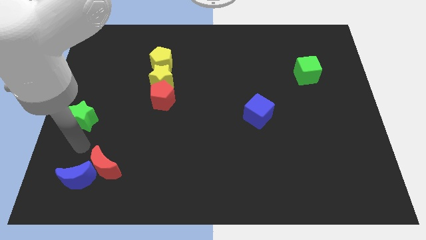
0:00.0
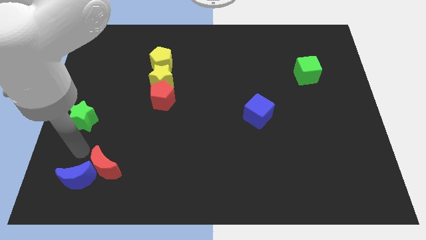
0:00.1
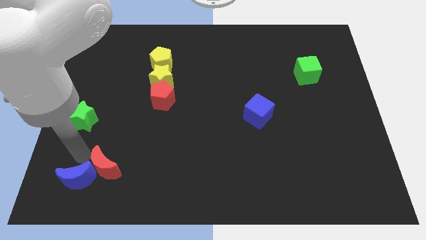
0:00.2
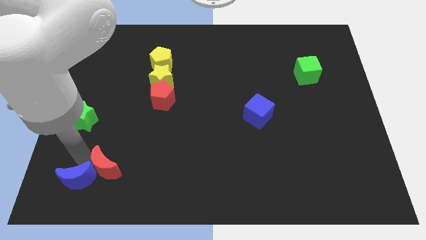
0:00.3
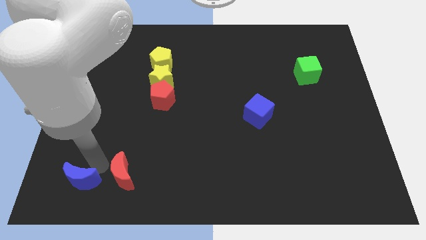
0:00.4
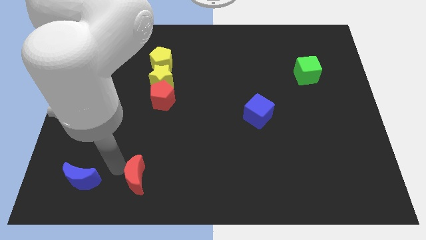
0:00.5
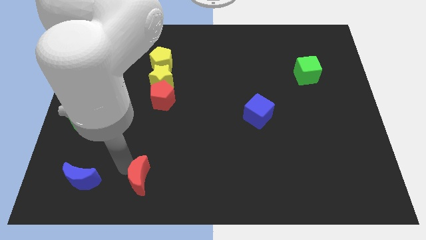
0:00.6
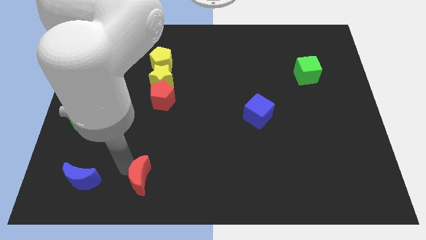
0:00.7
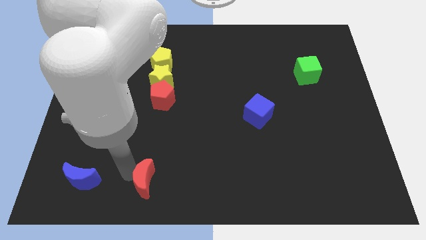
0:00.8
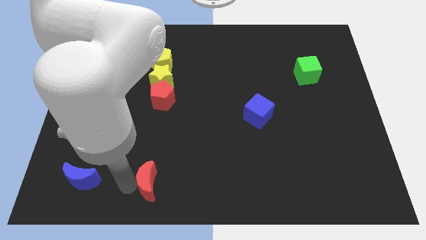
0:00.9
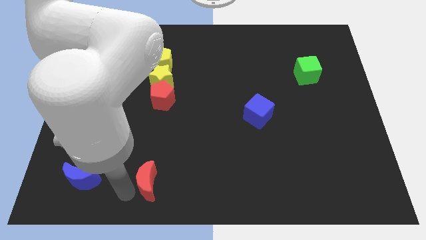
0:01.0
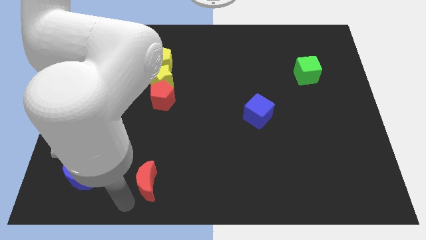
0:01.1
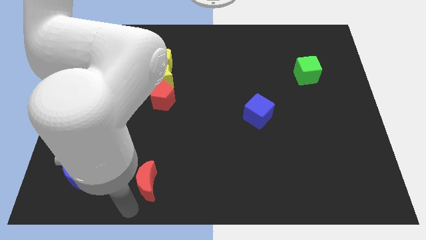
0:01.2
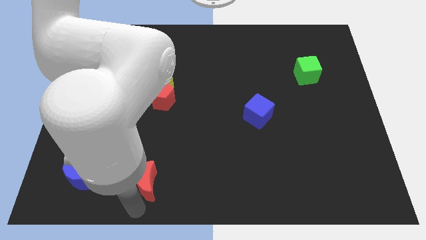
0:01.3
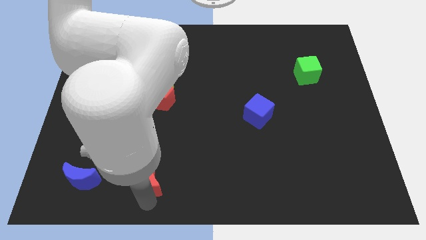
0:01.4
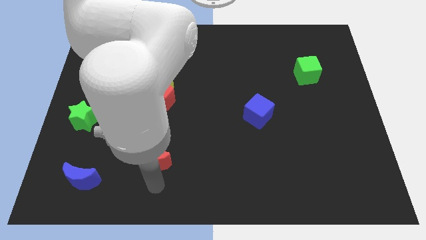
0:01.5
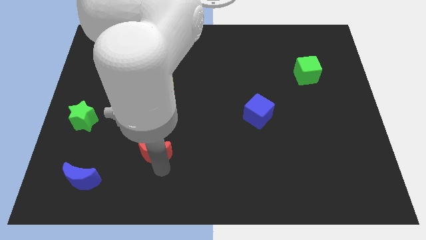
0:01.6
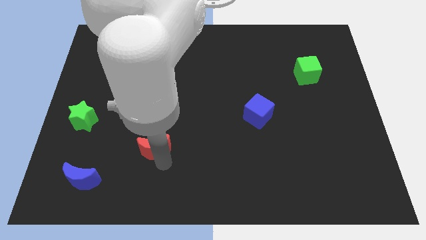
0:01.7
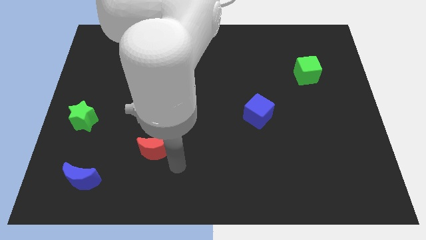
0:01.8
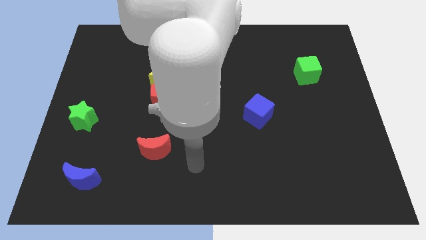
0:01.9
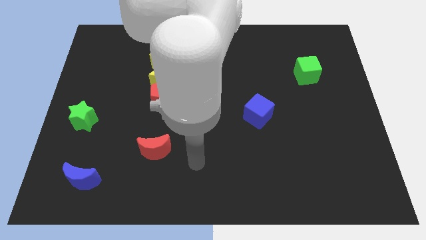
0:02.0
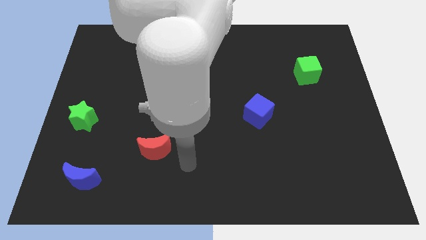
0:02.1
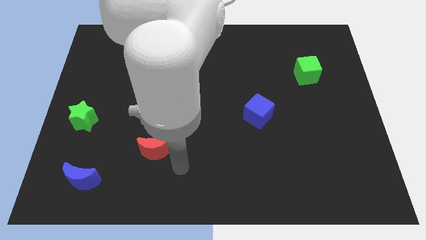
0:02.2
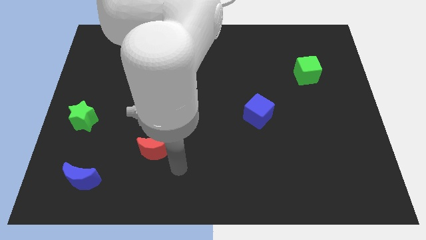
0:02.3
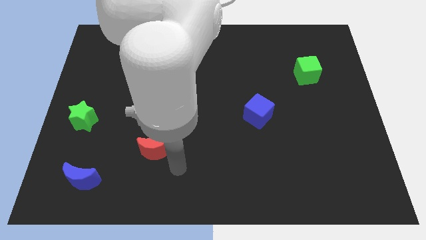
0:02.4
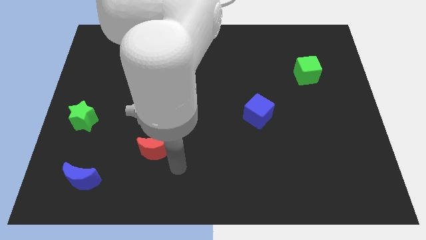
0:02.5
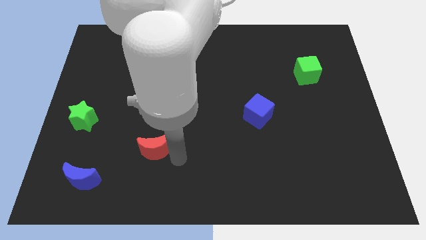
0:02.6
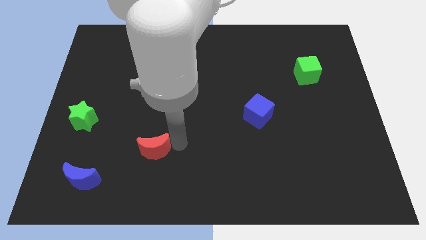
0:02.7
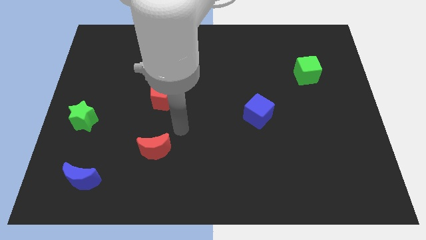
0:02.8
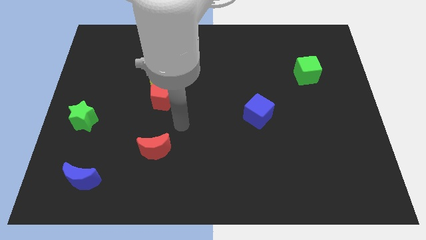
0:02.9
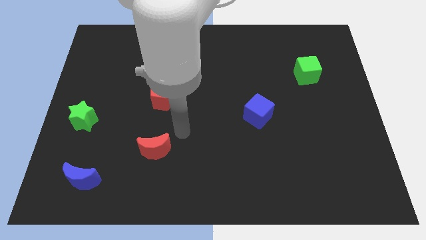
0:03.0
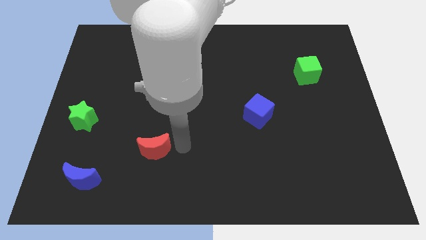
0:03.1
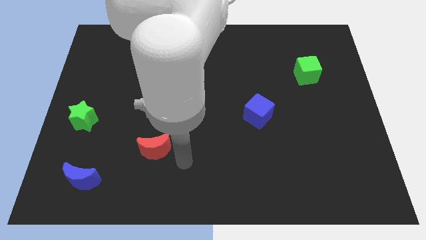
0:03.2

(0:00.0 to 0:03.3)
separate the red moon from the blue moon

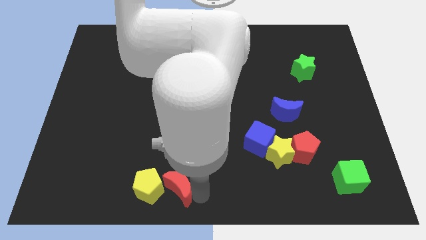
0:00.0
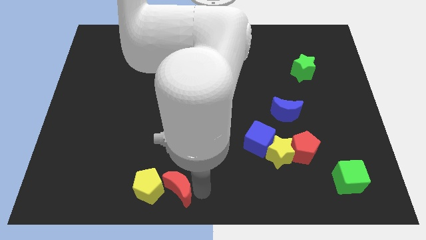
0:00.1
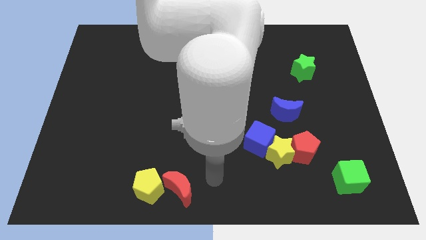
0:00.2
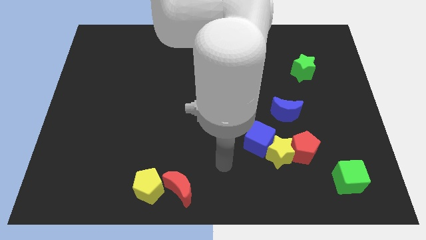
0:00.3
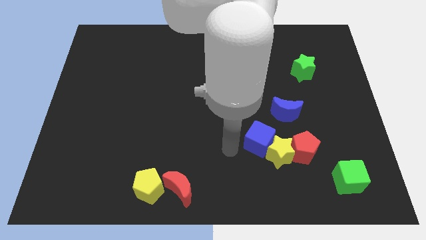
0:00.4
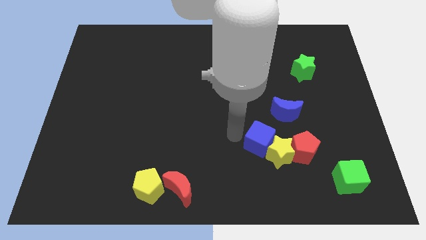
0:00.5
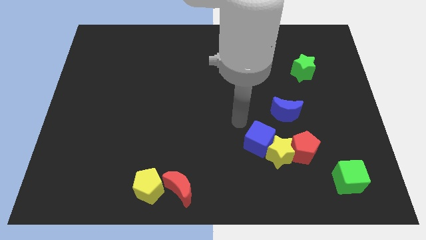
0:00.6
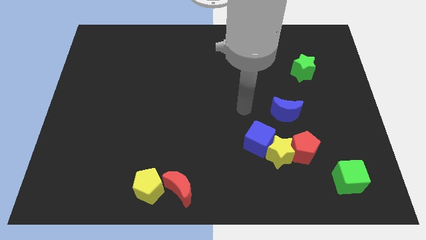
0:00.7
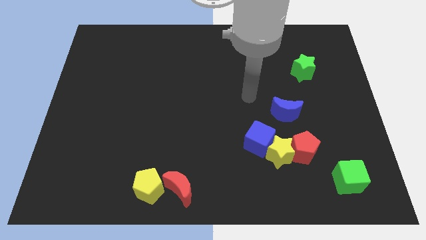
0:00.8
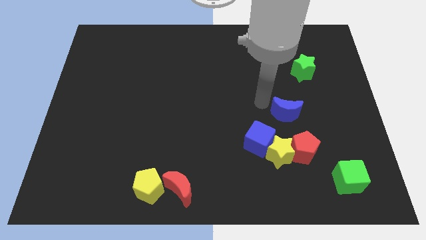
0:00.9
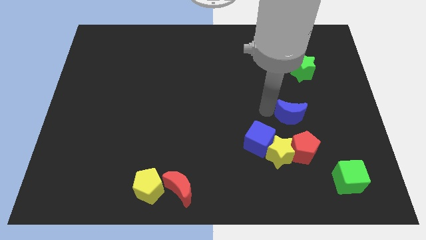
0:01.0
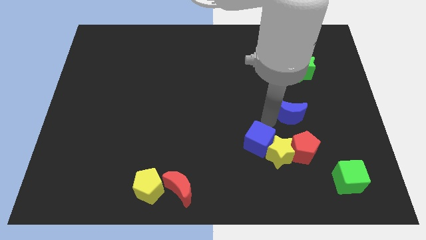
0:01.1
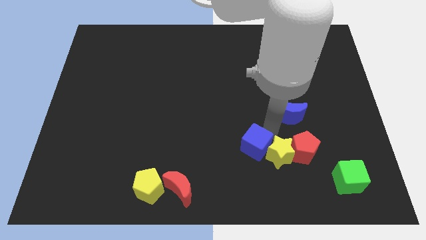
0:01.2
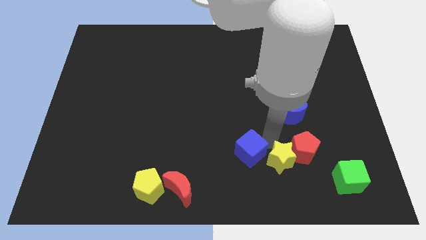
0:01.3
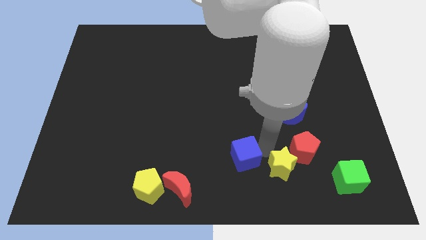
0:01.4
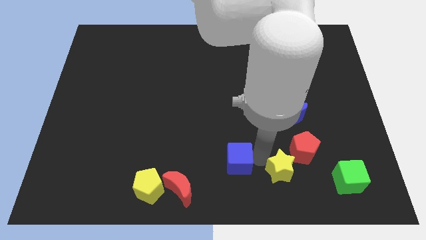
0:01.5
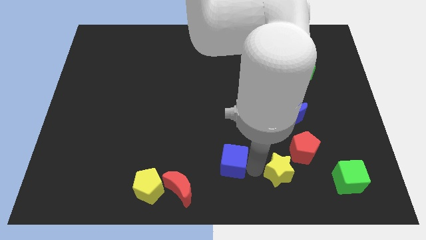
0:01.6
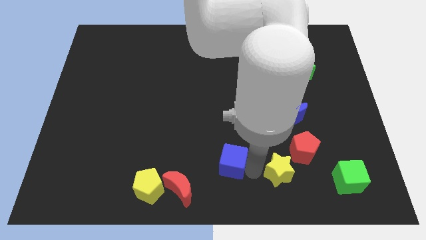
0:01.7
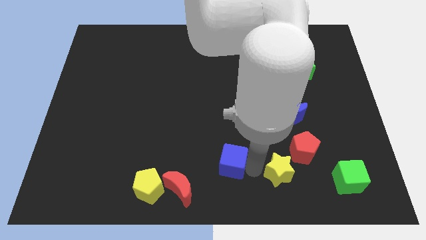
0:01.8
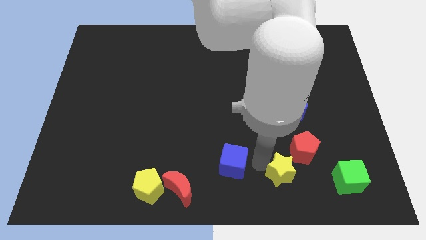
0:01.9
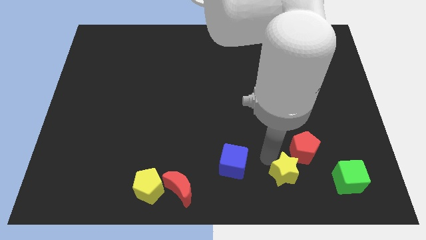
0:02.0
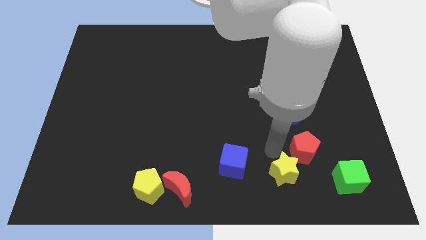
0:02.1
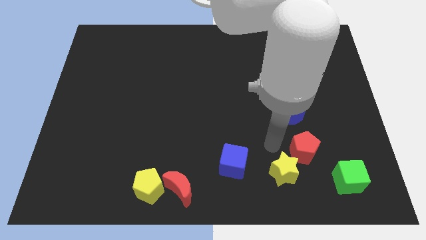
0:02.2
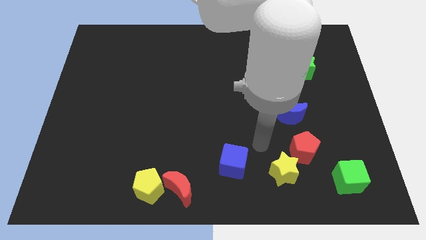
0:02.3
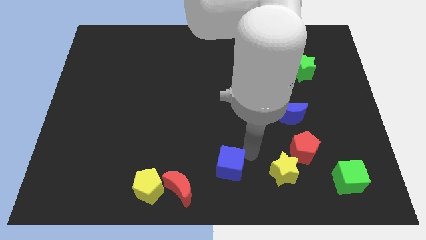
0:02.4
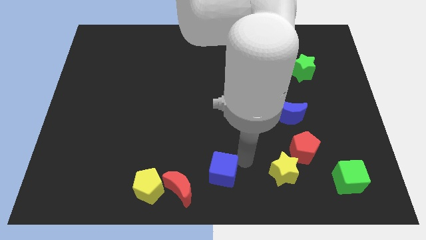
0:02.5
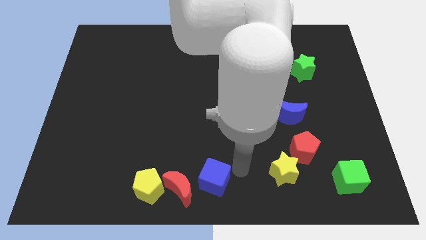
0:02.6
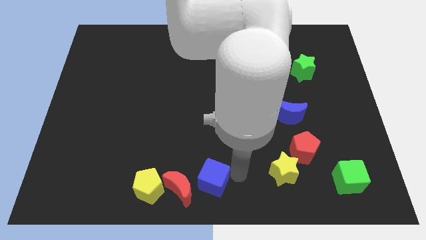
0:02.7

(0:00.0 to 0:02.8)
separate blue cube and yellow star

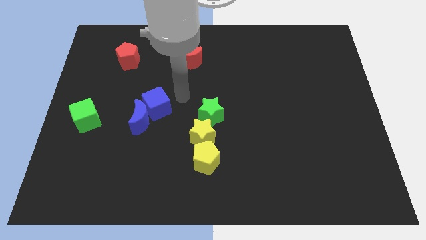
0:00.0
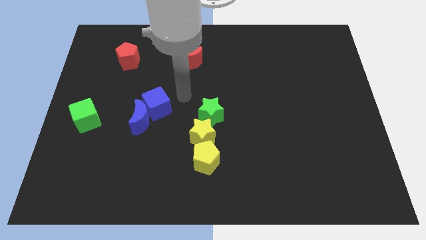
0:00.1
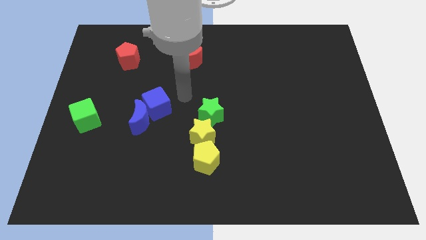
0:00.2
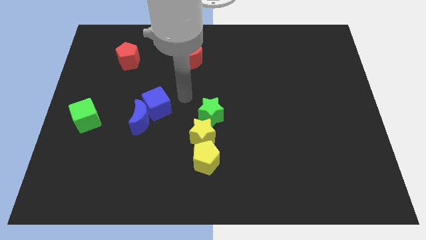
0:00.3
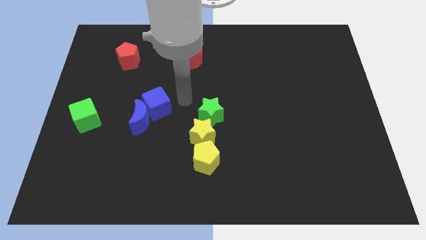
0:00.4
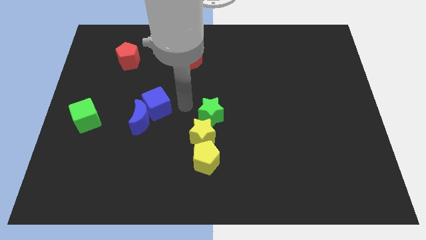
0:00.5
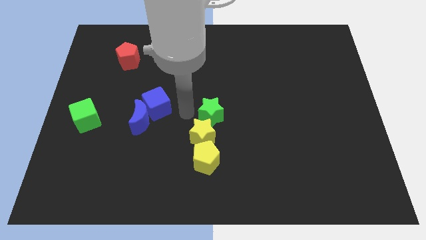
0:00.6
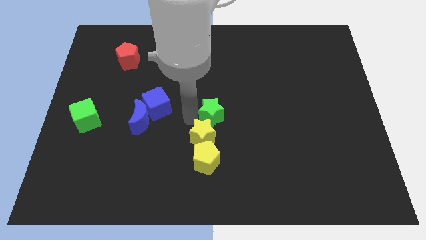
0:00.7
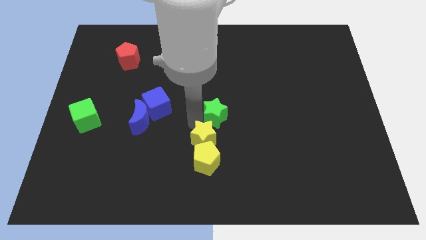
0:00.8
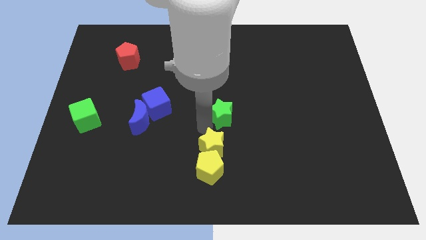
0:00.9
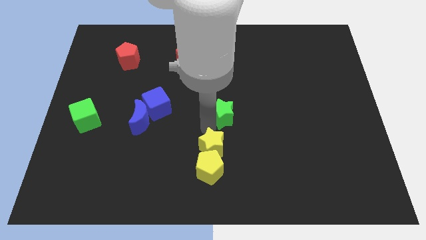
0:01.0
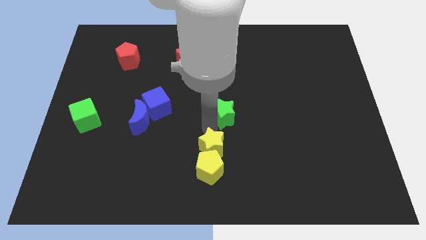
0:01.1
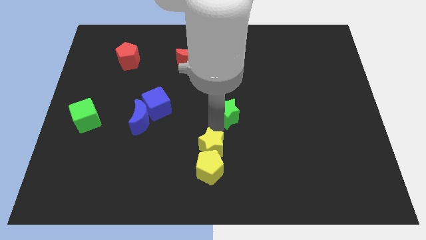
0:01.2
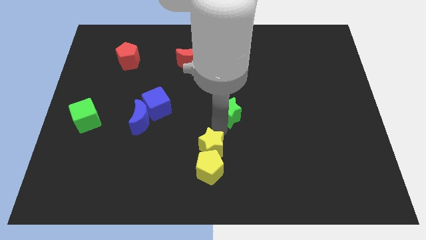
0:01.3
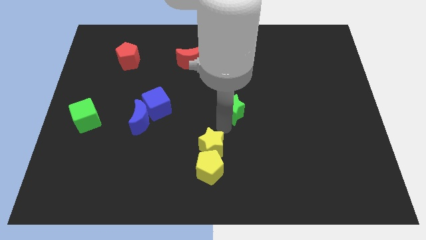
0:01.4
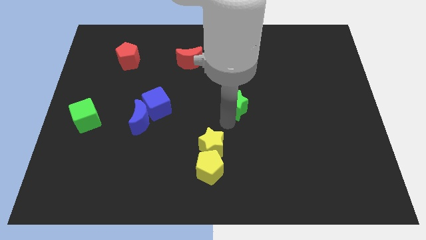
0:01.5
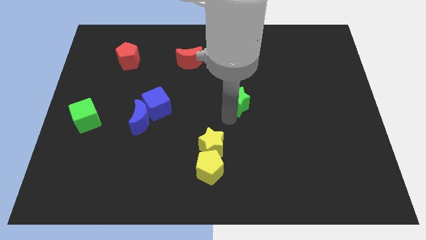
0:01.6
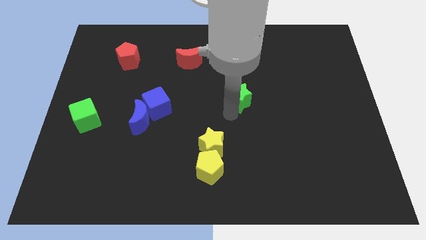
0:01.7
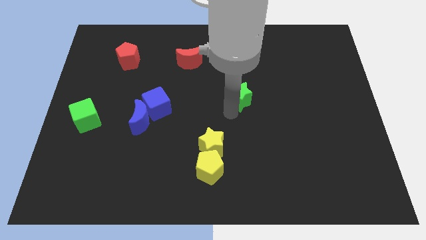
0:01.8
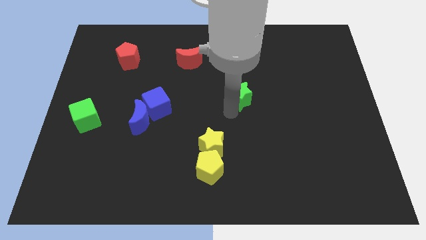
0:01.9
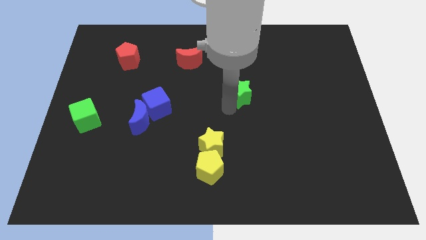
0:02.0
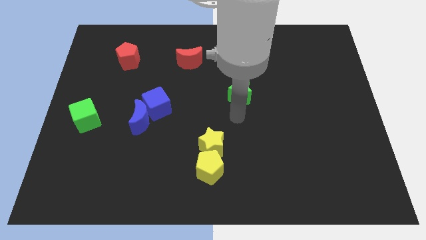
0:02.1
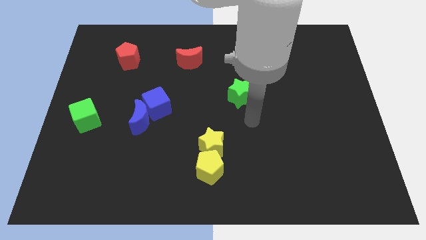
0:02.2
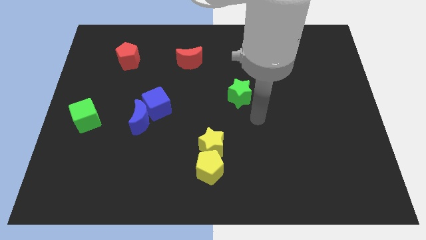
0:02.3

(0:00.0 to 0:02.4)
move the green star away from the yellow star

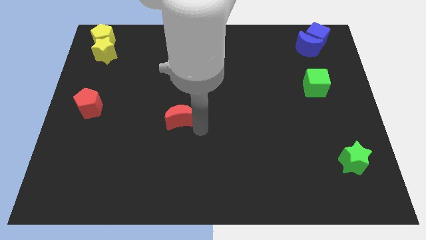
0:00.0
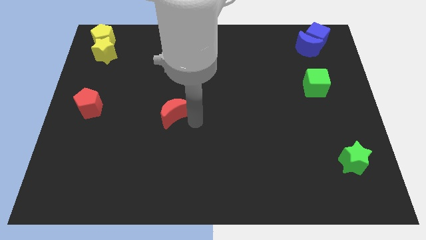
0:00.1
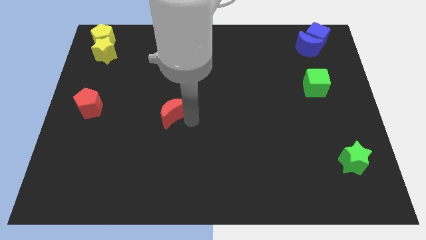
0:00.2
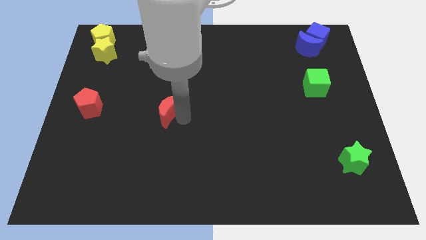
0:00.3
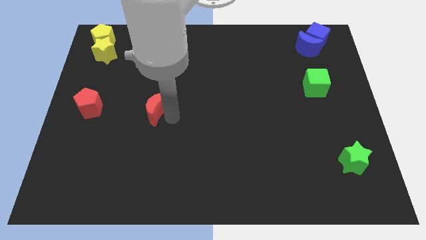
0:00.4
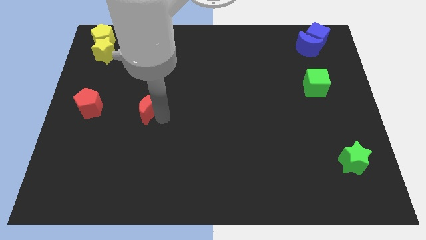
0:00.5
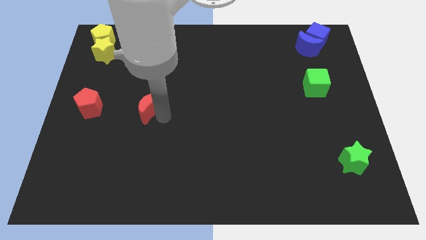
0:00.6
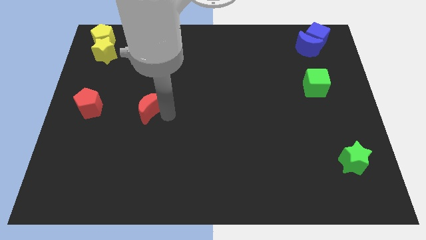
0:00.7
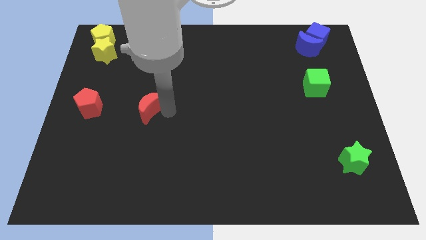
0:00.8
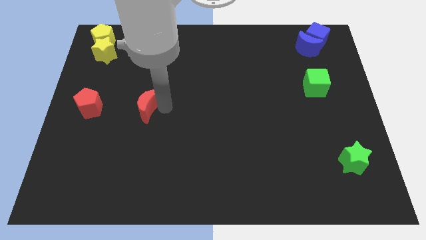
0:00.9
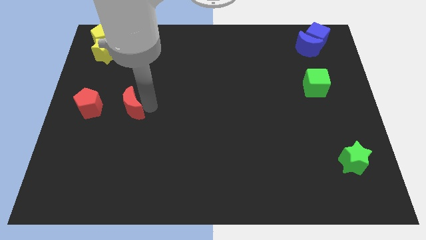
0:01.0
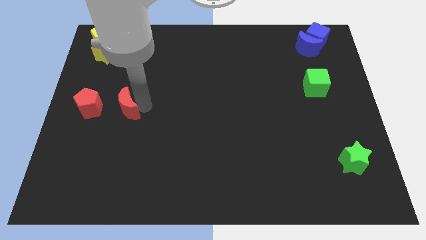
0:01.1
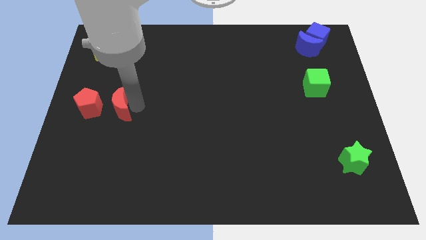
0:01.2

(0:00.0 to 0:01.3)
place red crescent on the right side of the red pentagon
